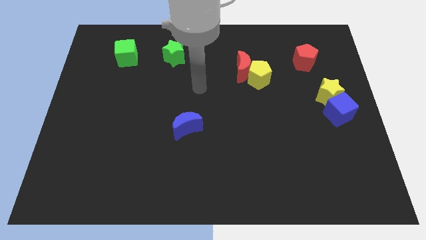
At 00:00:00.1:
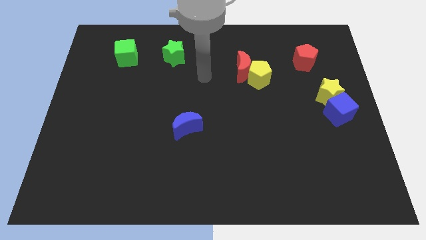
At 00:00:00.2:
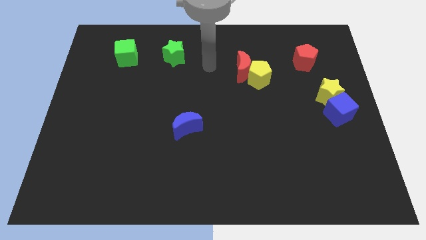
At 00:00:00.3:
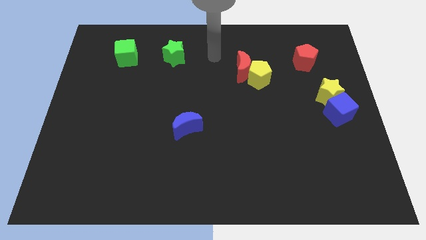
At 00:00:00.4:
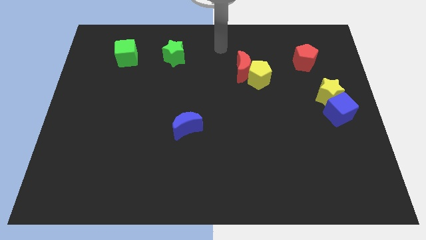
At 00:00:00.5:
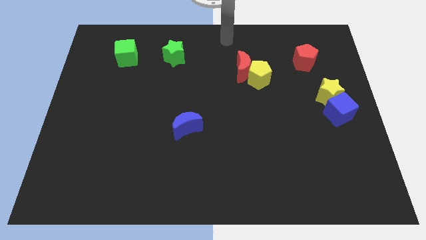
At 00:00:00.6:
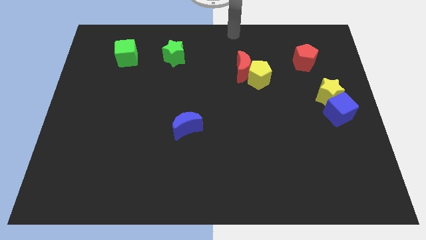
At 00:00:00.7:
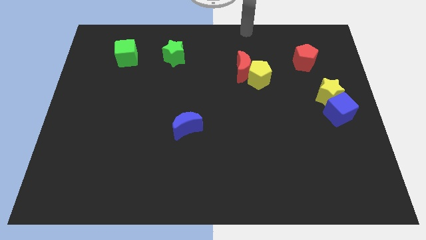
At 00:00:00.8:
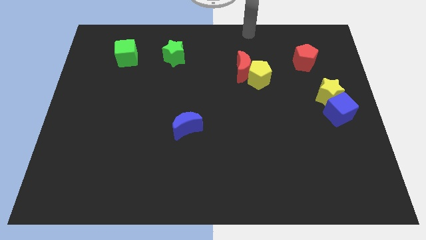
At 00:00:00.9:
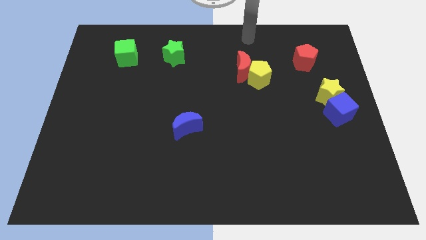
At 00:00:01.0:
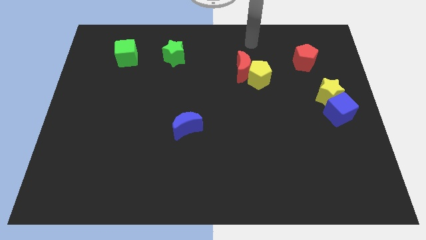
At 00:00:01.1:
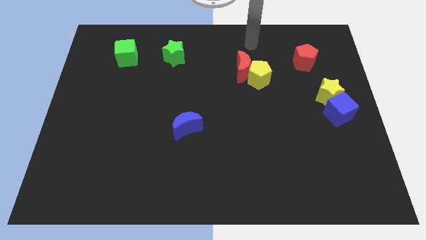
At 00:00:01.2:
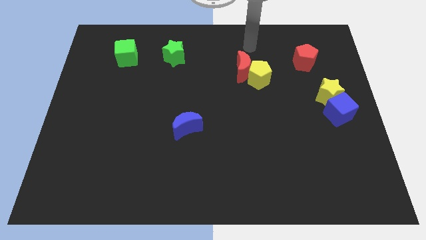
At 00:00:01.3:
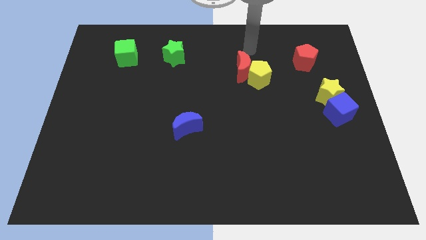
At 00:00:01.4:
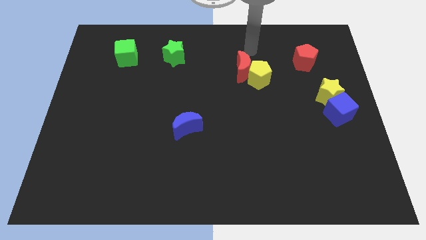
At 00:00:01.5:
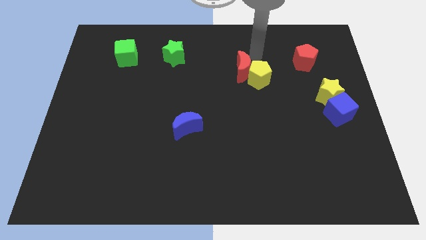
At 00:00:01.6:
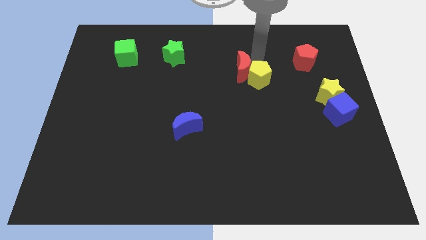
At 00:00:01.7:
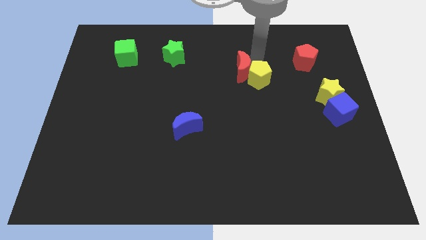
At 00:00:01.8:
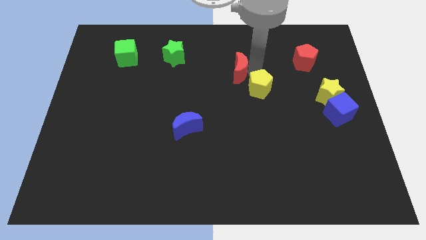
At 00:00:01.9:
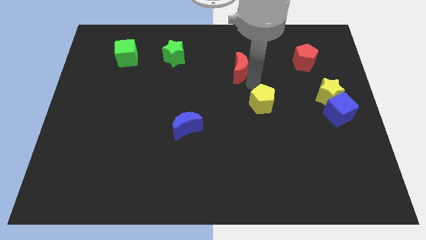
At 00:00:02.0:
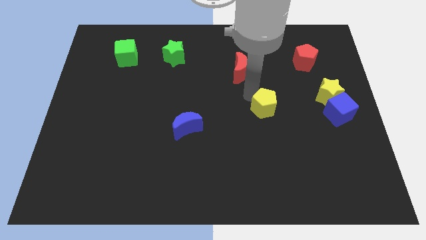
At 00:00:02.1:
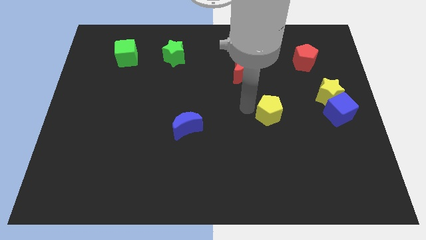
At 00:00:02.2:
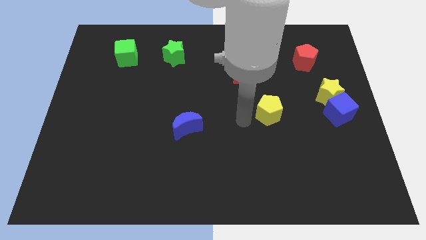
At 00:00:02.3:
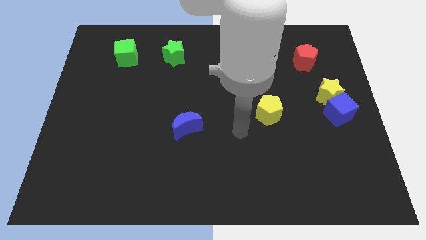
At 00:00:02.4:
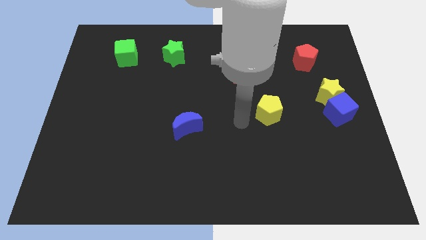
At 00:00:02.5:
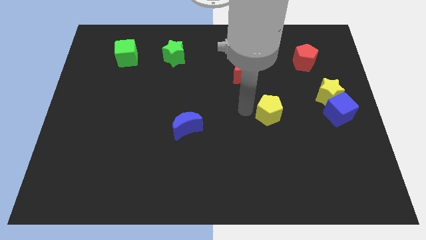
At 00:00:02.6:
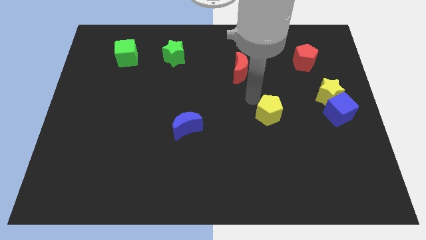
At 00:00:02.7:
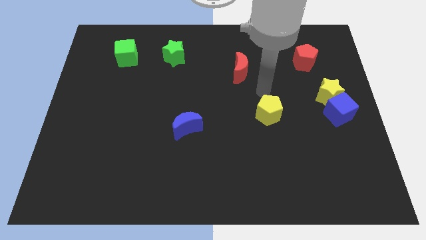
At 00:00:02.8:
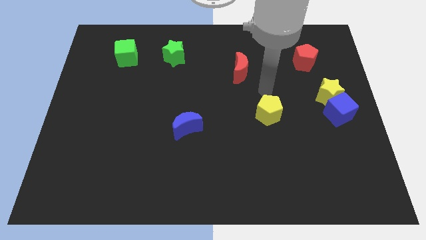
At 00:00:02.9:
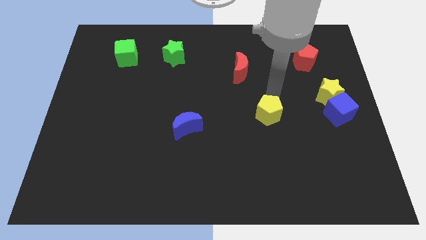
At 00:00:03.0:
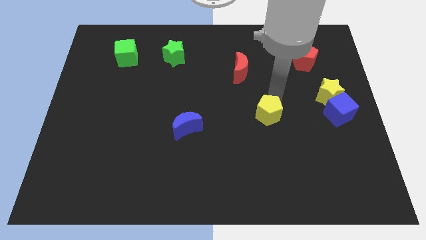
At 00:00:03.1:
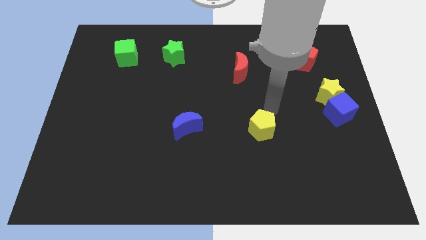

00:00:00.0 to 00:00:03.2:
push the yellow pentagon downward

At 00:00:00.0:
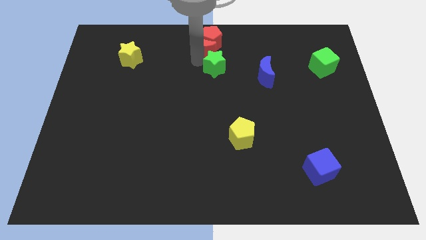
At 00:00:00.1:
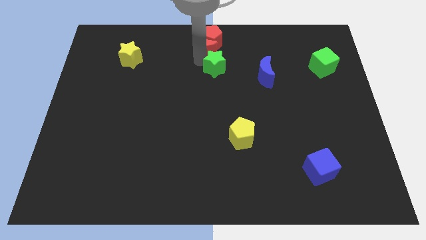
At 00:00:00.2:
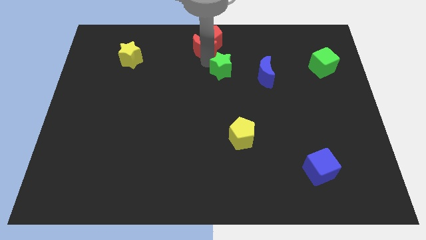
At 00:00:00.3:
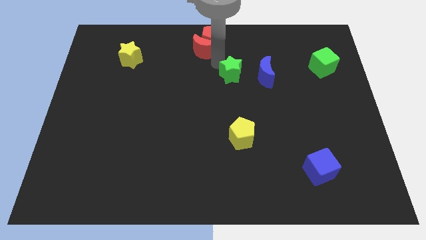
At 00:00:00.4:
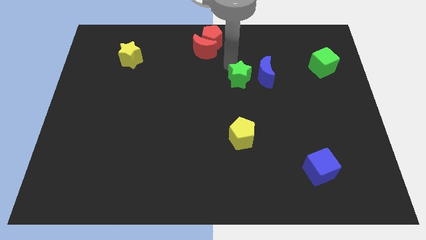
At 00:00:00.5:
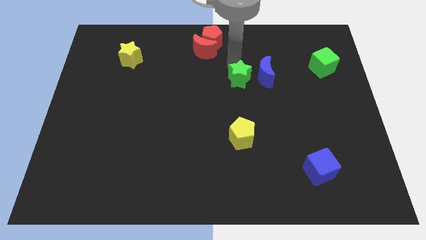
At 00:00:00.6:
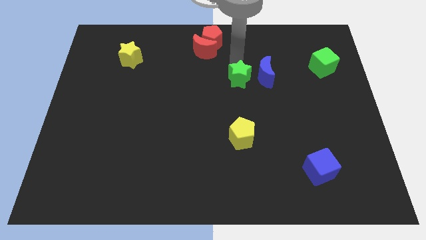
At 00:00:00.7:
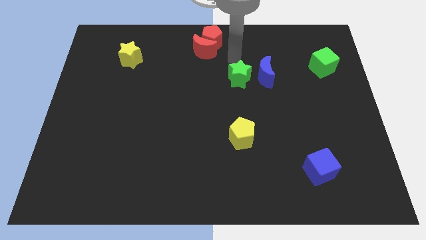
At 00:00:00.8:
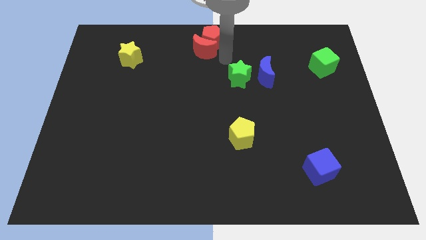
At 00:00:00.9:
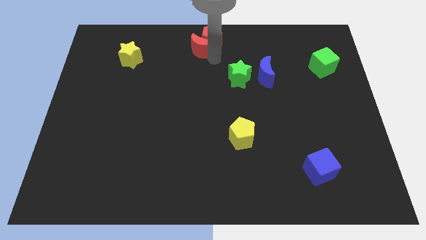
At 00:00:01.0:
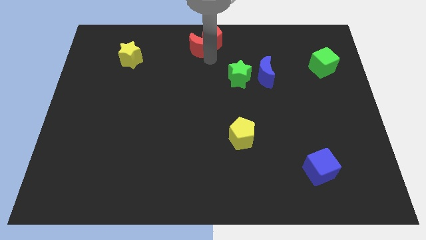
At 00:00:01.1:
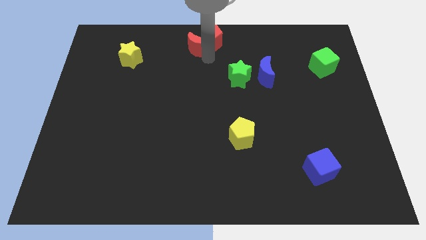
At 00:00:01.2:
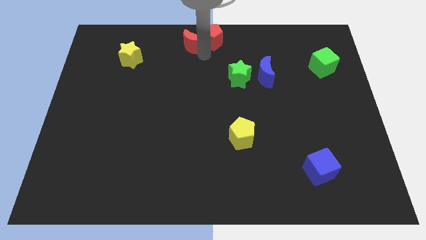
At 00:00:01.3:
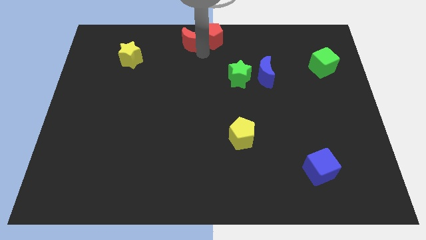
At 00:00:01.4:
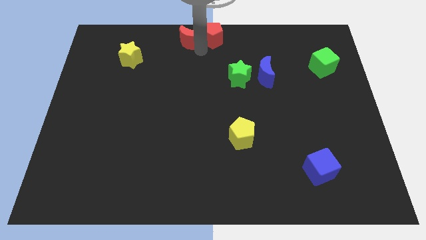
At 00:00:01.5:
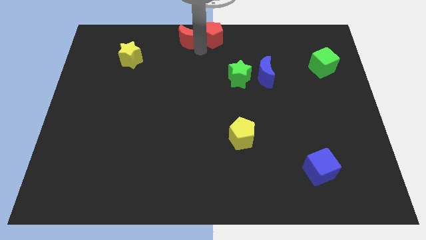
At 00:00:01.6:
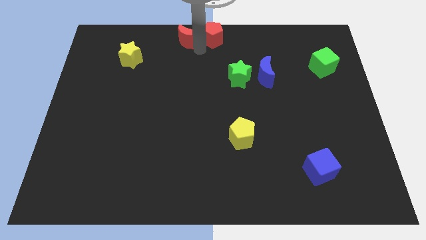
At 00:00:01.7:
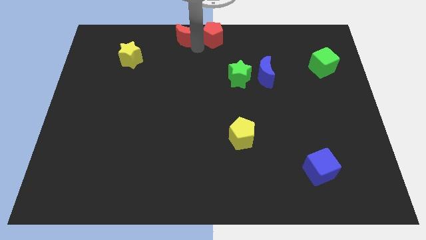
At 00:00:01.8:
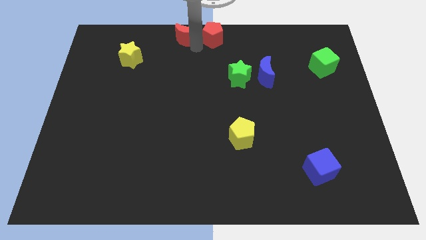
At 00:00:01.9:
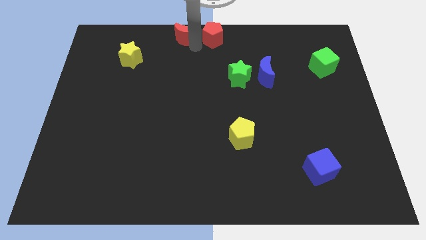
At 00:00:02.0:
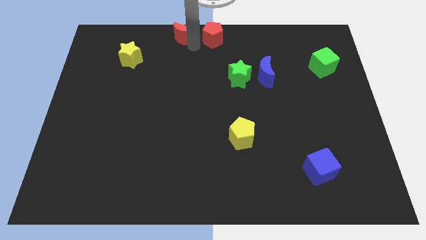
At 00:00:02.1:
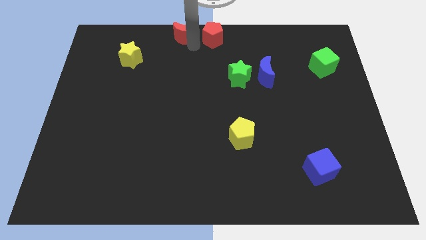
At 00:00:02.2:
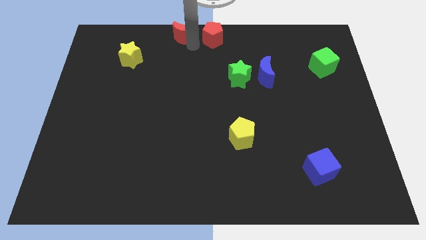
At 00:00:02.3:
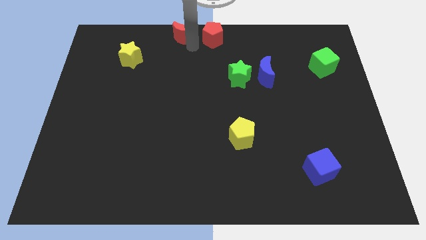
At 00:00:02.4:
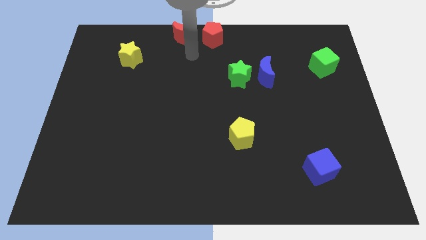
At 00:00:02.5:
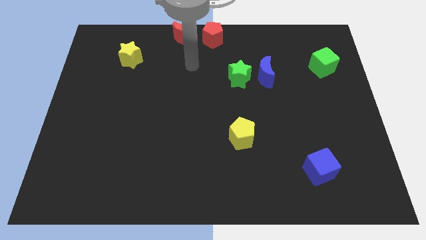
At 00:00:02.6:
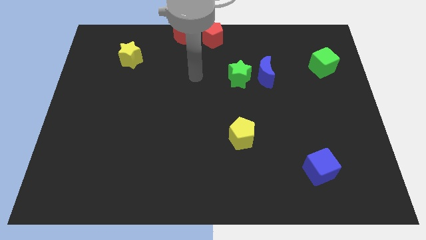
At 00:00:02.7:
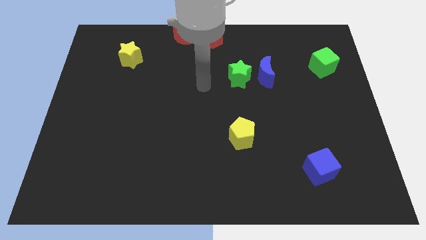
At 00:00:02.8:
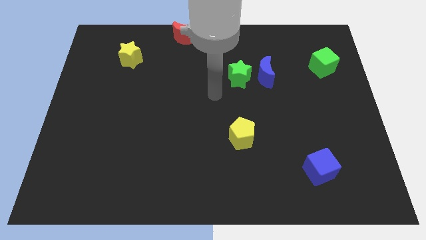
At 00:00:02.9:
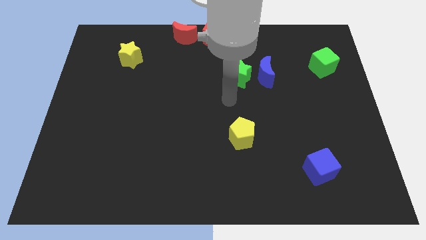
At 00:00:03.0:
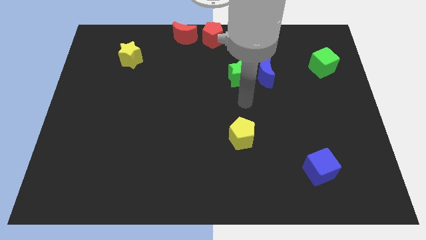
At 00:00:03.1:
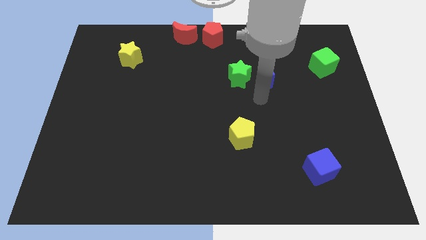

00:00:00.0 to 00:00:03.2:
move green star from red blocks

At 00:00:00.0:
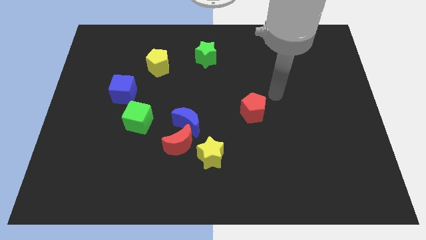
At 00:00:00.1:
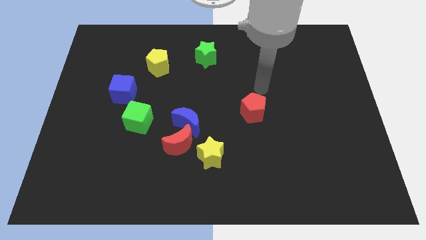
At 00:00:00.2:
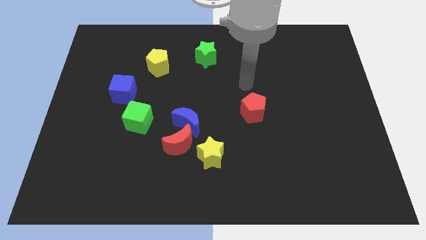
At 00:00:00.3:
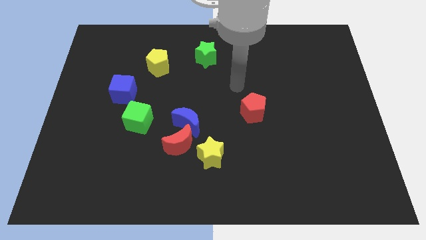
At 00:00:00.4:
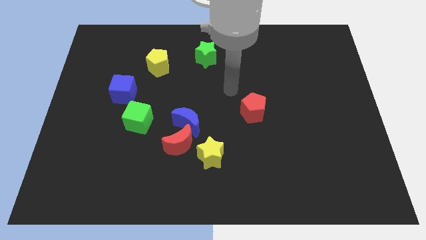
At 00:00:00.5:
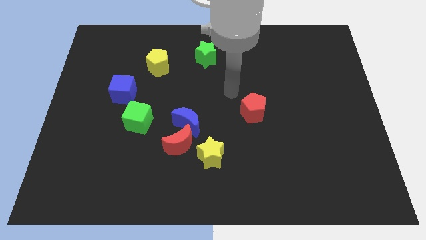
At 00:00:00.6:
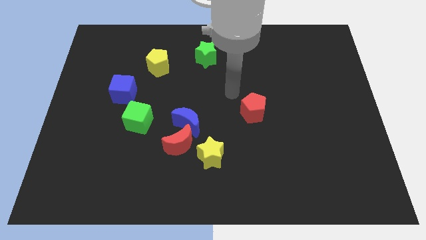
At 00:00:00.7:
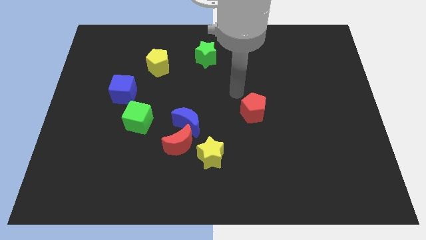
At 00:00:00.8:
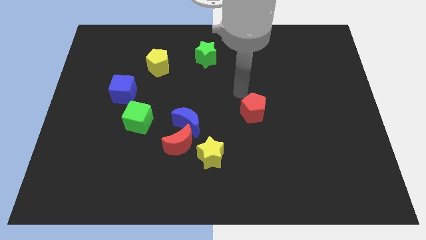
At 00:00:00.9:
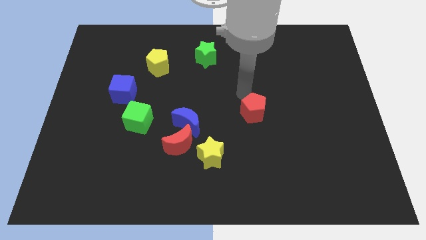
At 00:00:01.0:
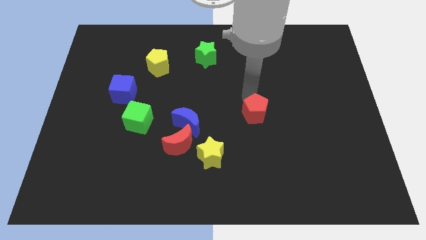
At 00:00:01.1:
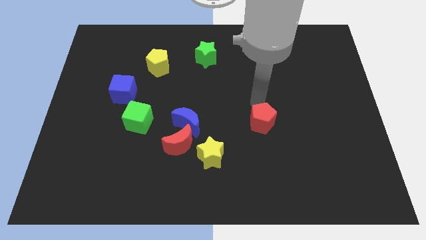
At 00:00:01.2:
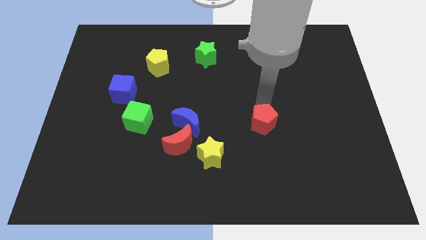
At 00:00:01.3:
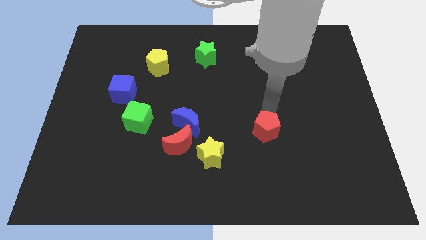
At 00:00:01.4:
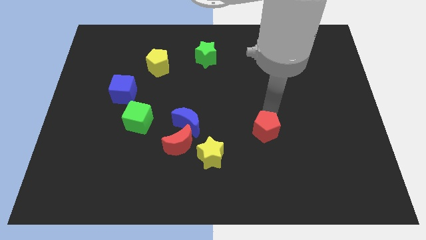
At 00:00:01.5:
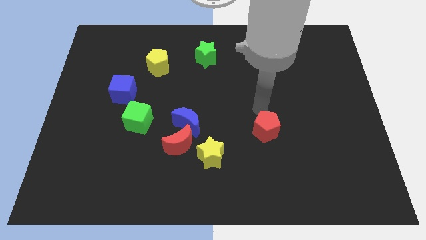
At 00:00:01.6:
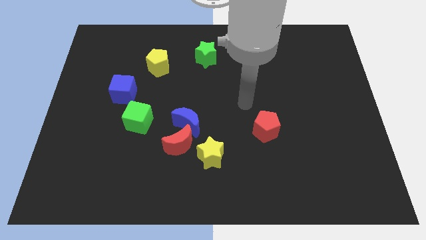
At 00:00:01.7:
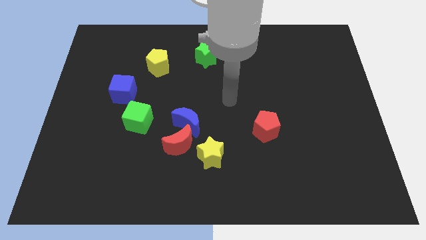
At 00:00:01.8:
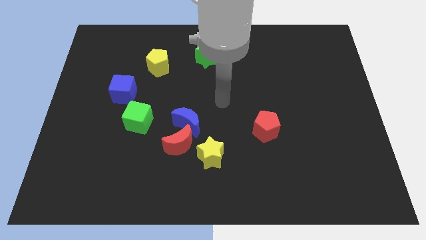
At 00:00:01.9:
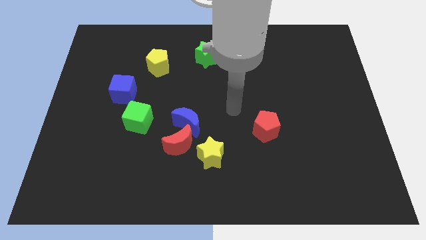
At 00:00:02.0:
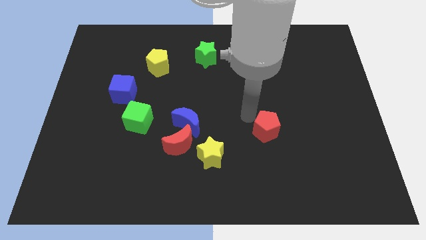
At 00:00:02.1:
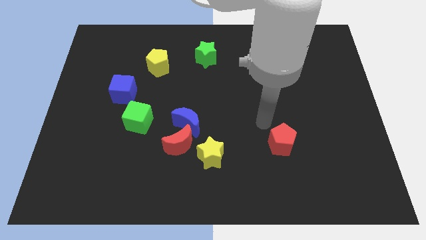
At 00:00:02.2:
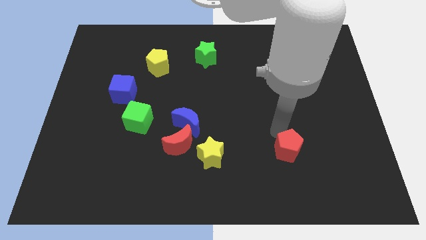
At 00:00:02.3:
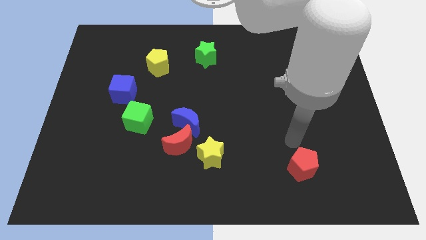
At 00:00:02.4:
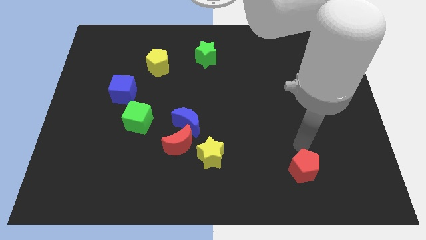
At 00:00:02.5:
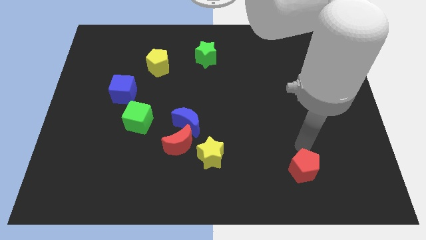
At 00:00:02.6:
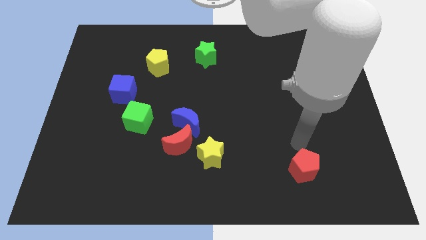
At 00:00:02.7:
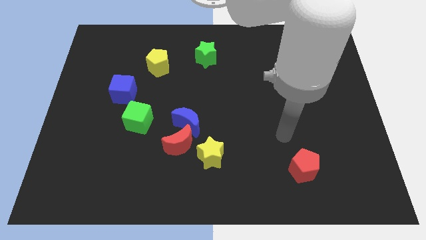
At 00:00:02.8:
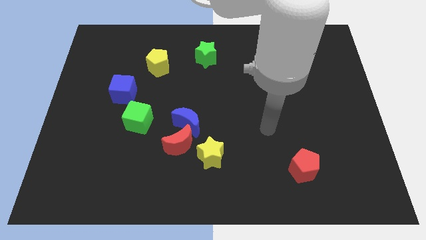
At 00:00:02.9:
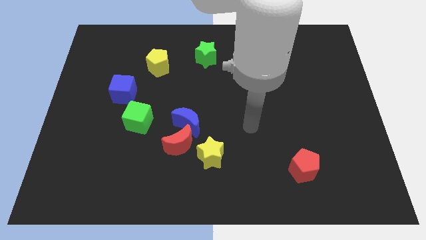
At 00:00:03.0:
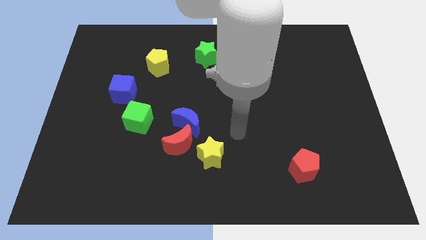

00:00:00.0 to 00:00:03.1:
push red pentagon to the right of yellow star
